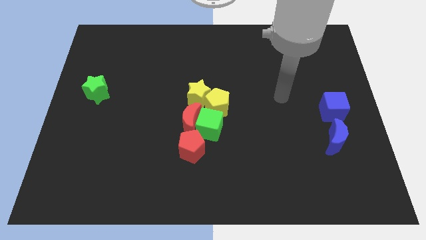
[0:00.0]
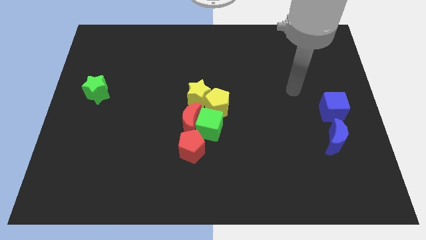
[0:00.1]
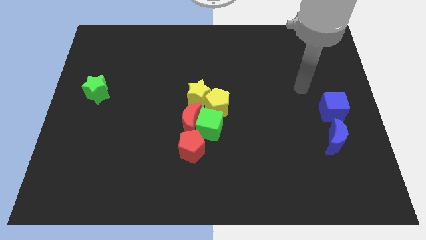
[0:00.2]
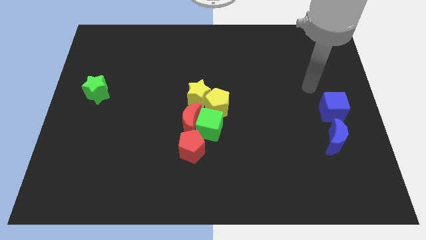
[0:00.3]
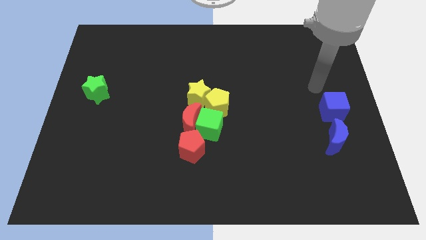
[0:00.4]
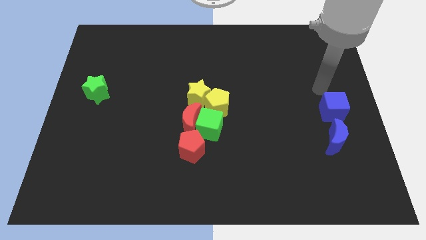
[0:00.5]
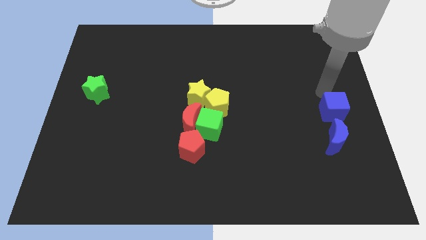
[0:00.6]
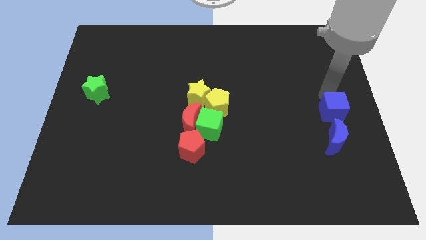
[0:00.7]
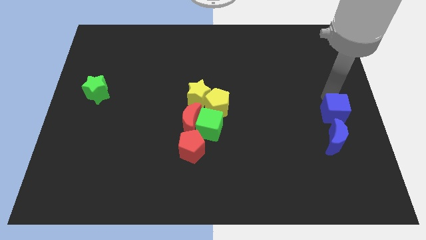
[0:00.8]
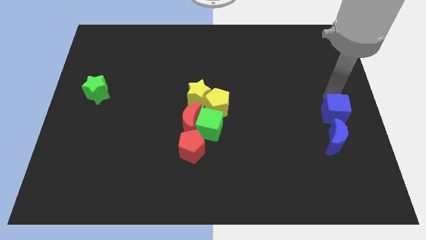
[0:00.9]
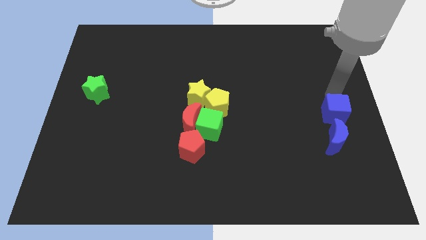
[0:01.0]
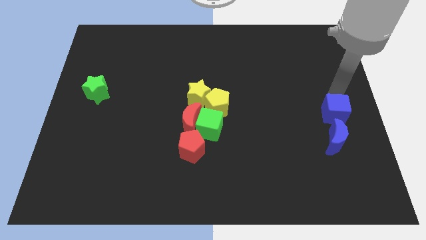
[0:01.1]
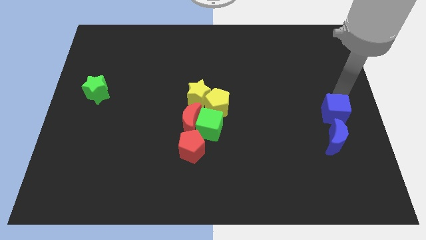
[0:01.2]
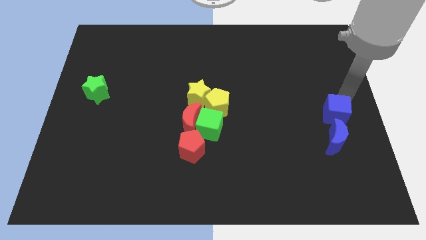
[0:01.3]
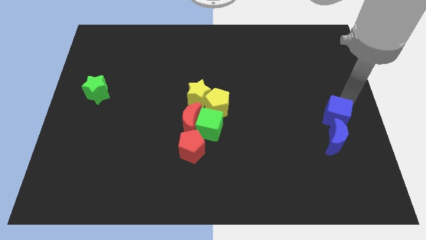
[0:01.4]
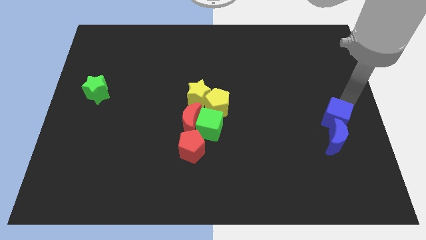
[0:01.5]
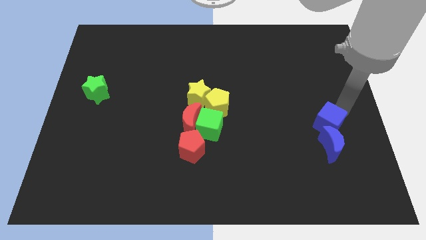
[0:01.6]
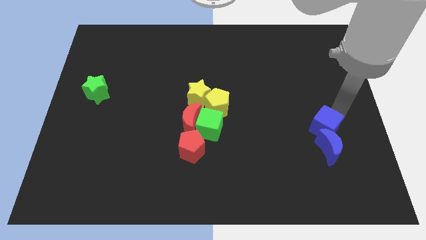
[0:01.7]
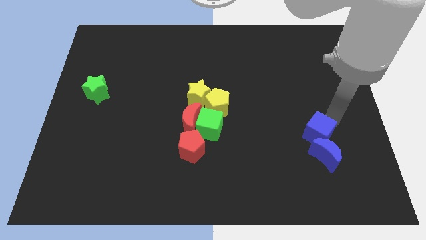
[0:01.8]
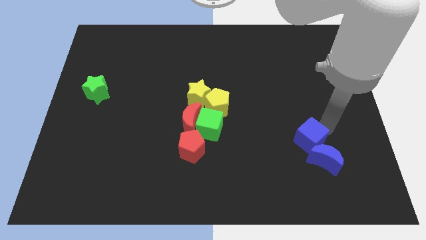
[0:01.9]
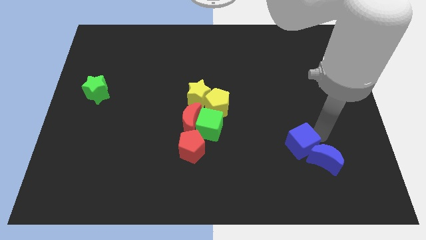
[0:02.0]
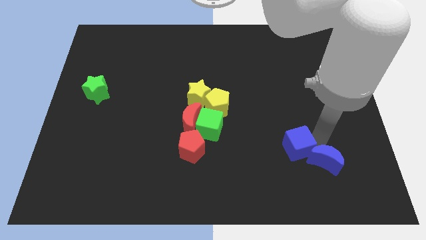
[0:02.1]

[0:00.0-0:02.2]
push the blue cube into blue crescent

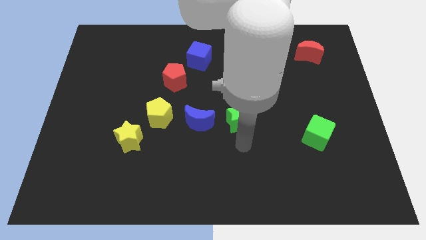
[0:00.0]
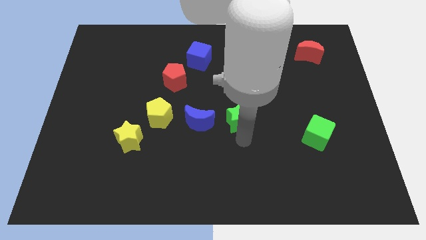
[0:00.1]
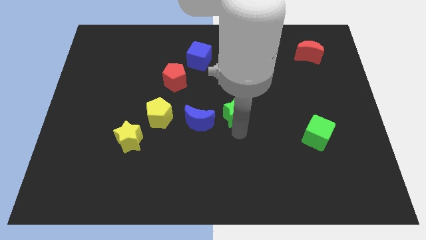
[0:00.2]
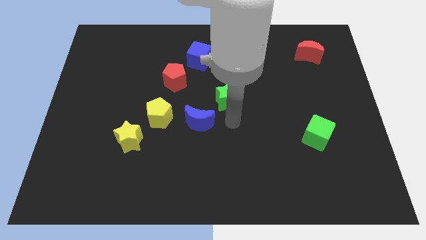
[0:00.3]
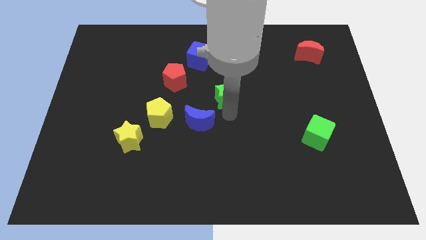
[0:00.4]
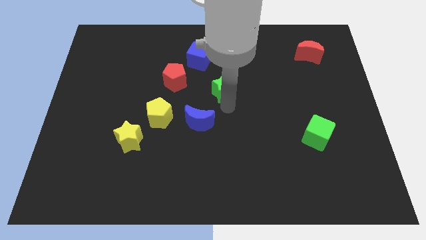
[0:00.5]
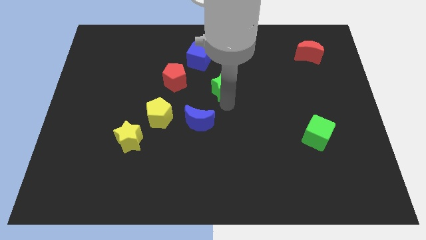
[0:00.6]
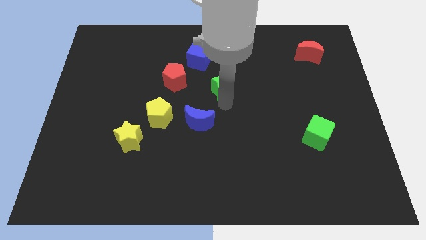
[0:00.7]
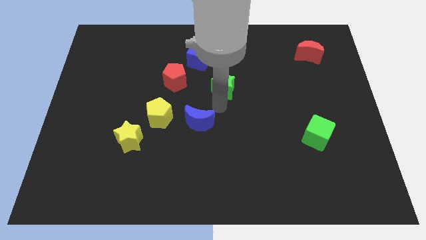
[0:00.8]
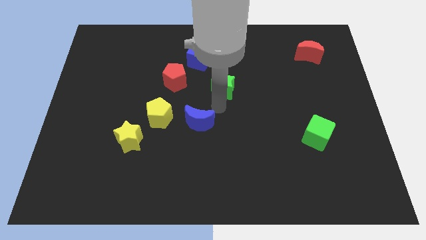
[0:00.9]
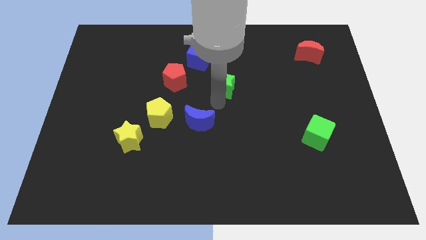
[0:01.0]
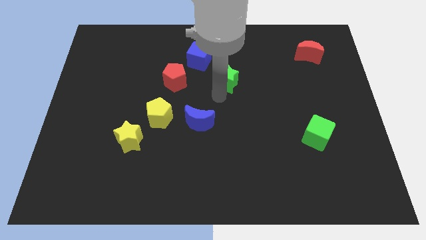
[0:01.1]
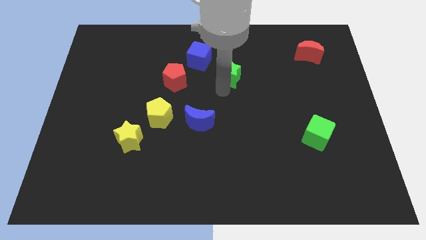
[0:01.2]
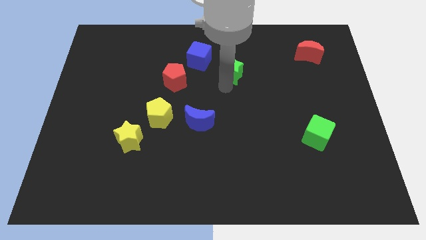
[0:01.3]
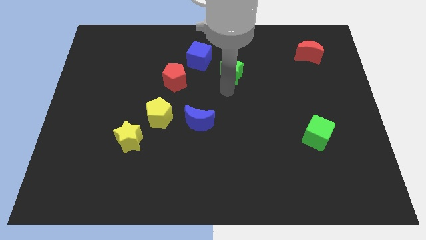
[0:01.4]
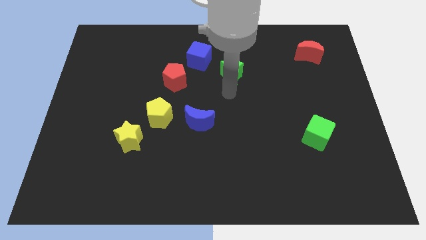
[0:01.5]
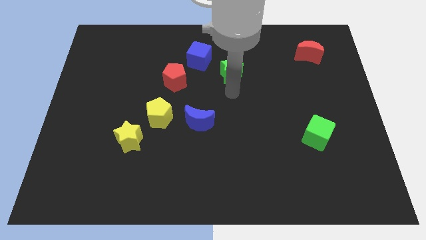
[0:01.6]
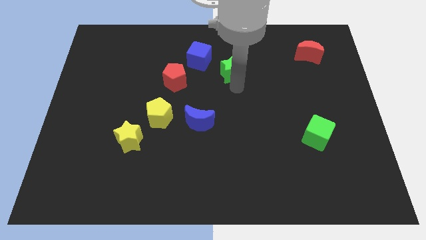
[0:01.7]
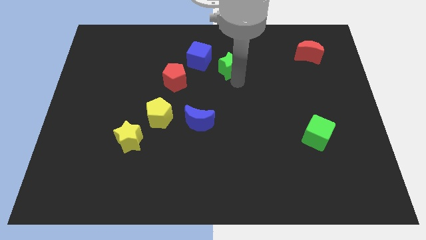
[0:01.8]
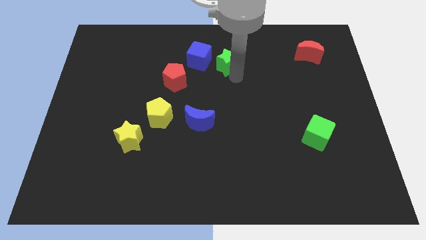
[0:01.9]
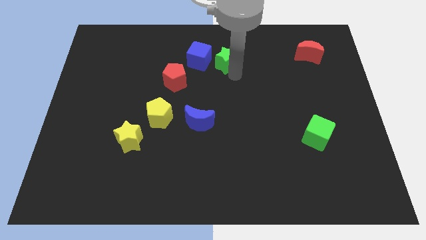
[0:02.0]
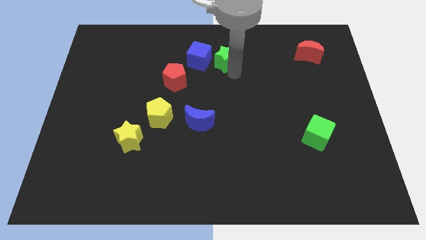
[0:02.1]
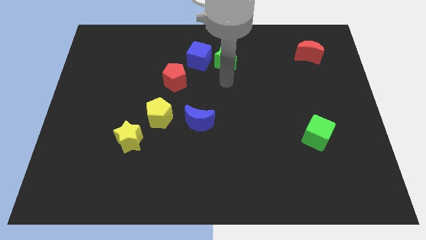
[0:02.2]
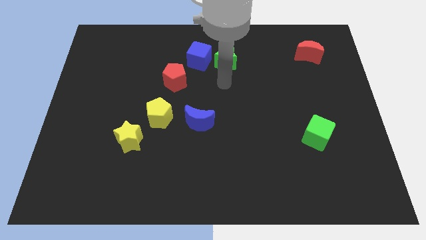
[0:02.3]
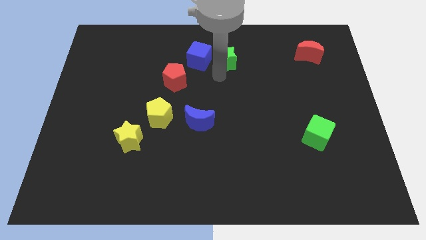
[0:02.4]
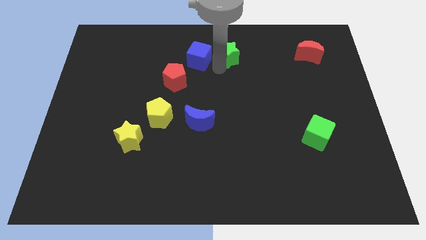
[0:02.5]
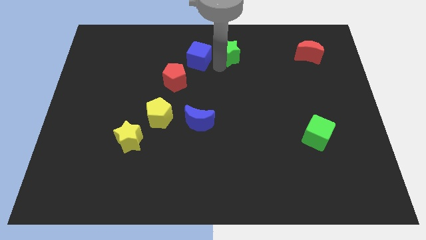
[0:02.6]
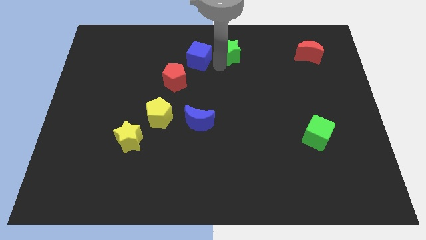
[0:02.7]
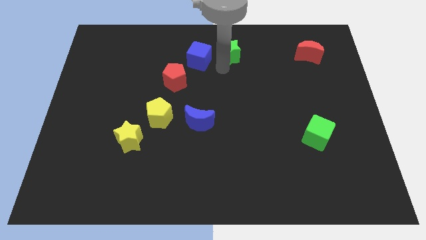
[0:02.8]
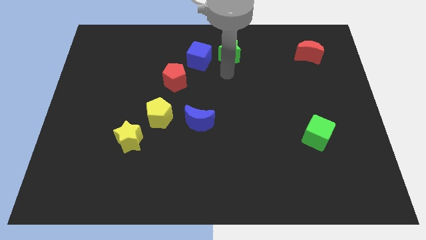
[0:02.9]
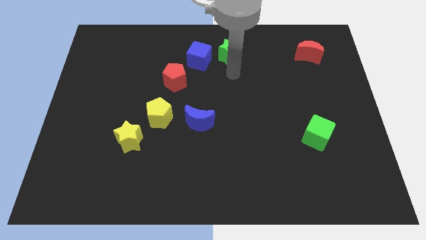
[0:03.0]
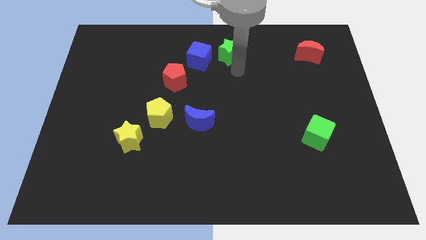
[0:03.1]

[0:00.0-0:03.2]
move the green star to the right side of the blue cube

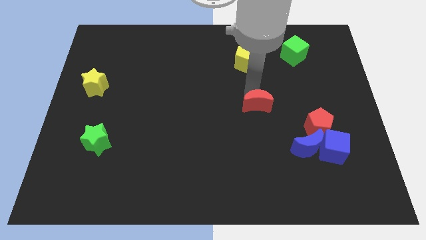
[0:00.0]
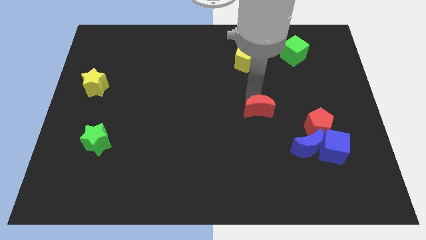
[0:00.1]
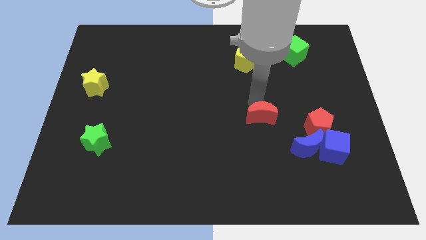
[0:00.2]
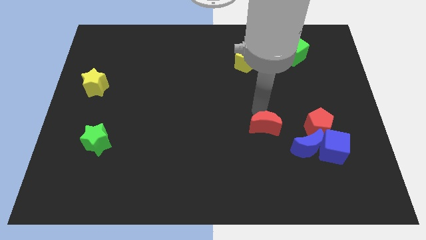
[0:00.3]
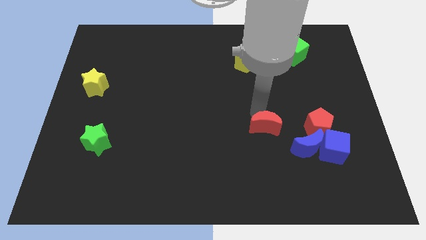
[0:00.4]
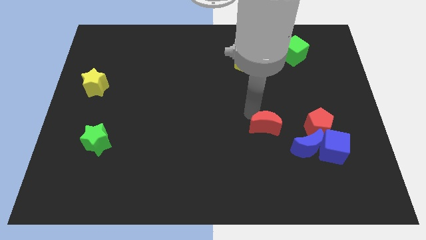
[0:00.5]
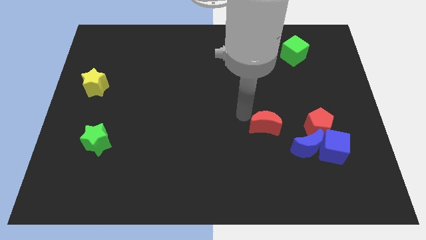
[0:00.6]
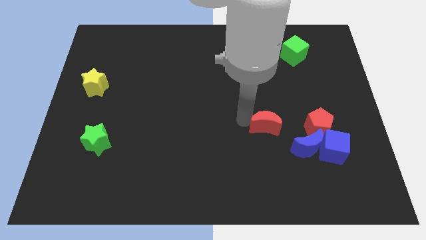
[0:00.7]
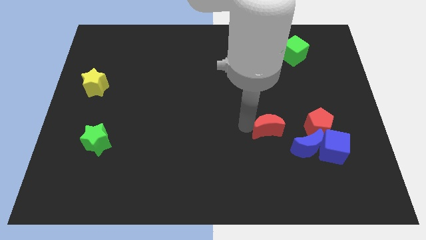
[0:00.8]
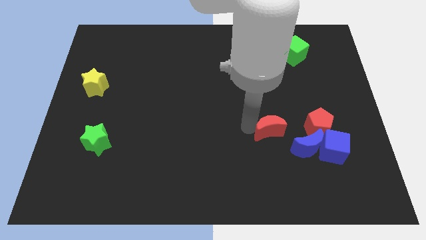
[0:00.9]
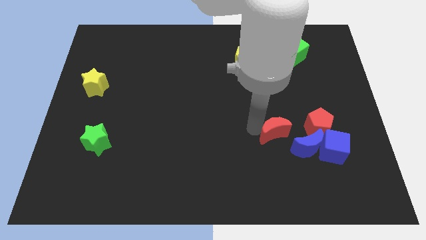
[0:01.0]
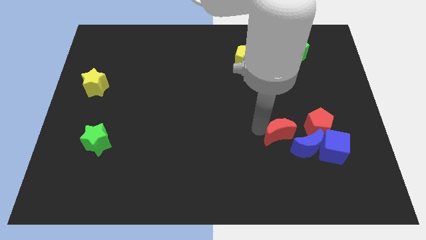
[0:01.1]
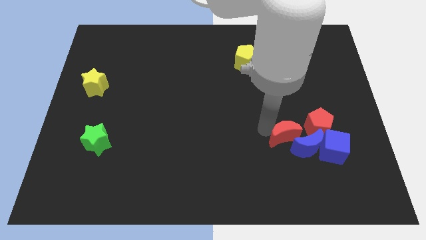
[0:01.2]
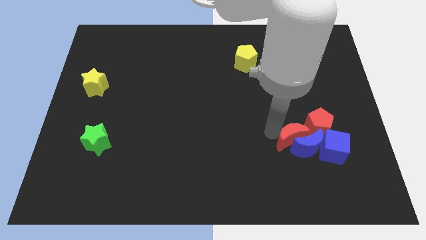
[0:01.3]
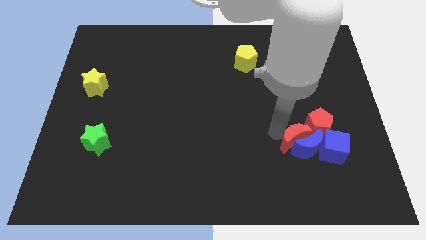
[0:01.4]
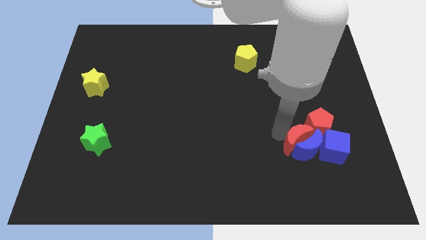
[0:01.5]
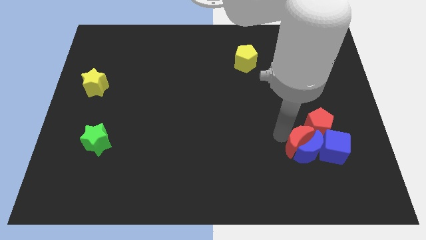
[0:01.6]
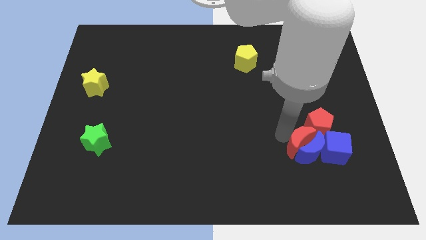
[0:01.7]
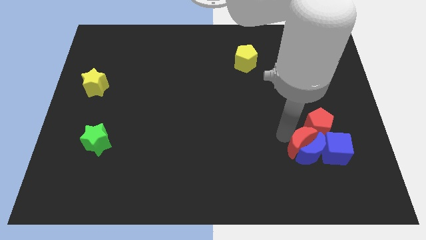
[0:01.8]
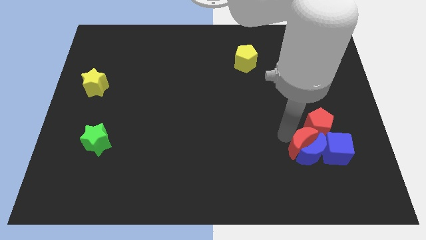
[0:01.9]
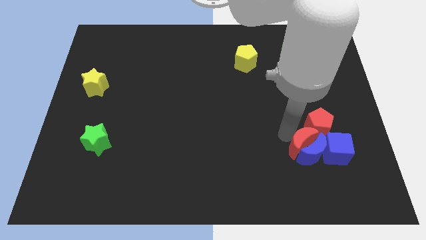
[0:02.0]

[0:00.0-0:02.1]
push the red moon into the group of blue and red blocks

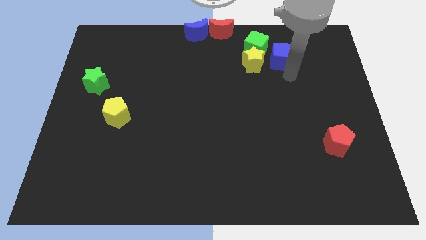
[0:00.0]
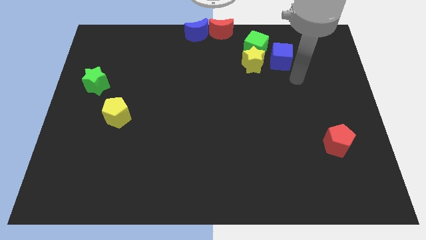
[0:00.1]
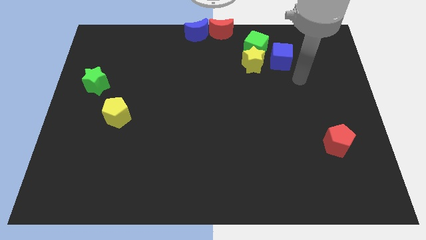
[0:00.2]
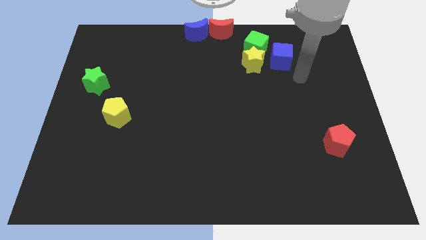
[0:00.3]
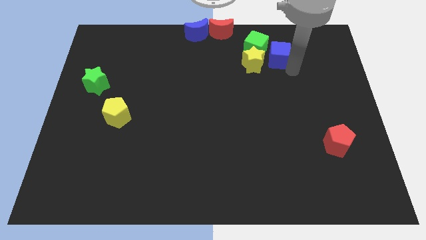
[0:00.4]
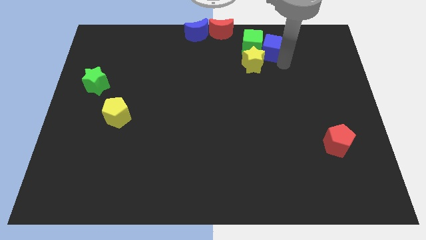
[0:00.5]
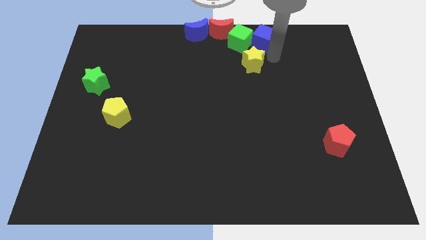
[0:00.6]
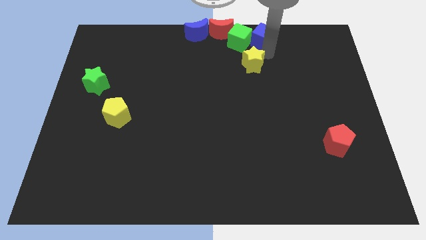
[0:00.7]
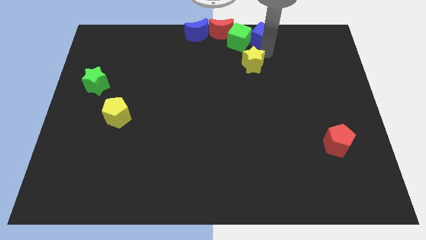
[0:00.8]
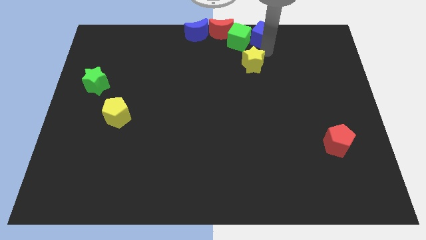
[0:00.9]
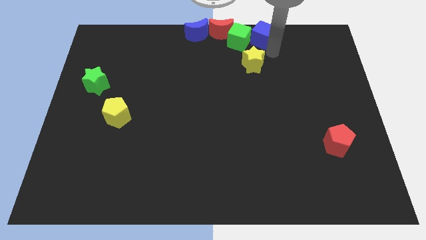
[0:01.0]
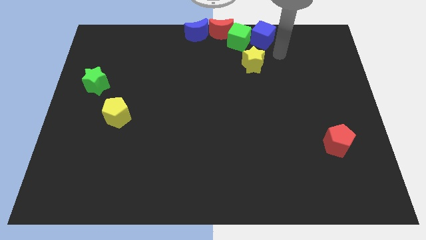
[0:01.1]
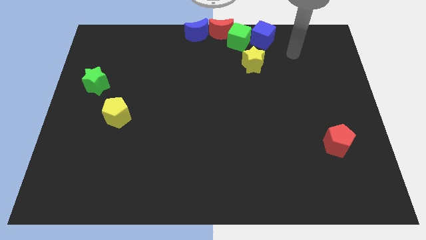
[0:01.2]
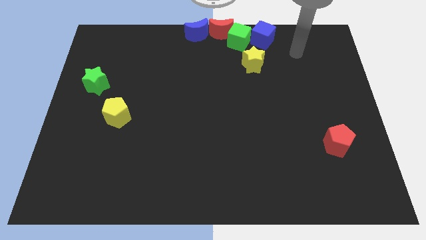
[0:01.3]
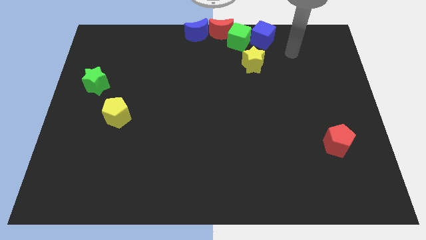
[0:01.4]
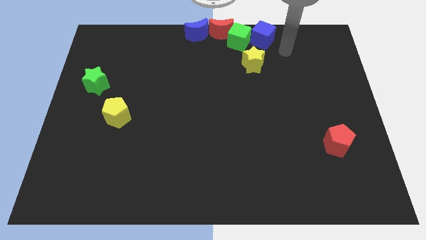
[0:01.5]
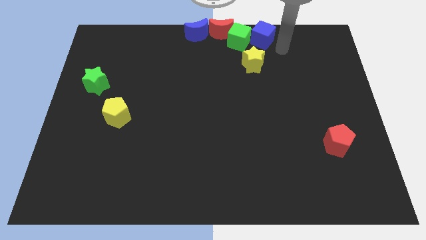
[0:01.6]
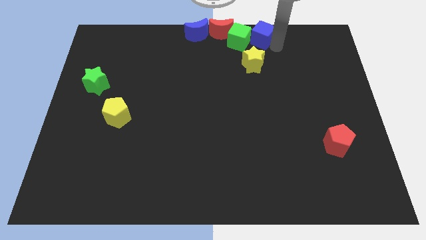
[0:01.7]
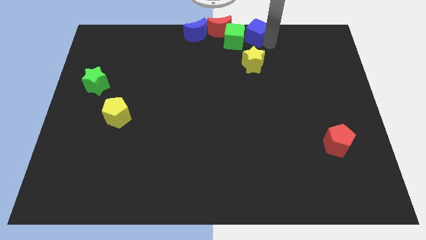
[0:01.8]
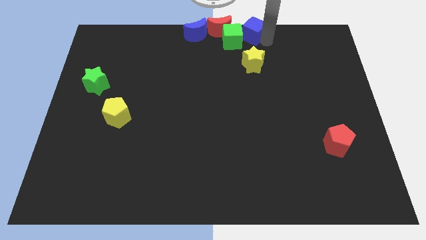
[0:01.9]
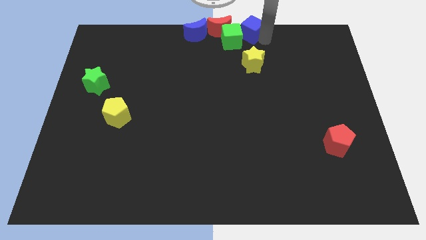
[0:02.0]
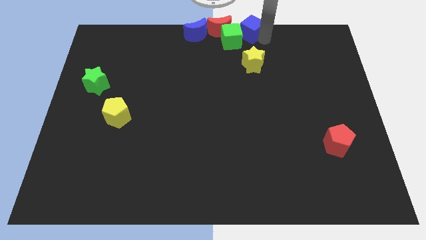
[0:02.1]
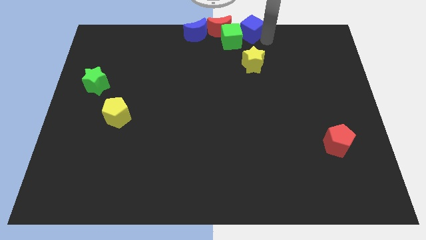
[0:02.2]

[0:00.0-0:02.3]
push blue cube to the top
